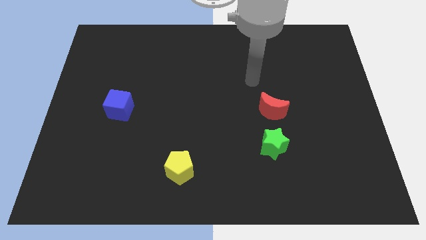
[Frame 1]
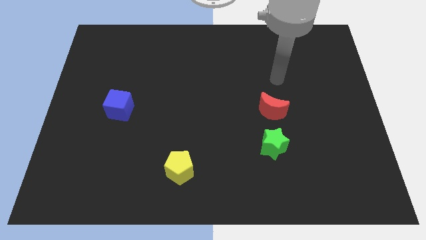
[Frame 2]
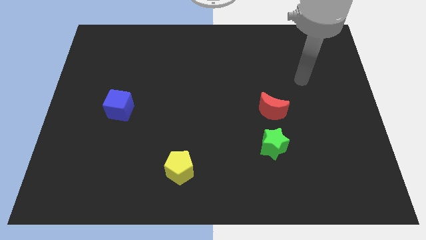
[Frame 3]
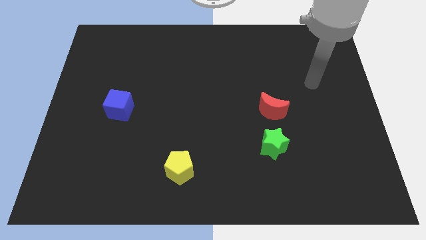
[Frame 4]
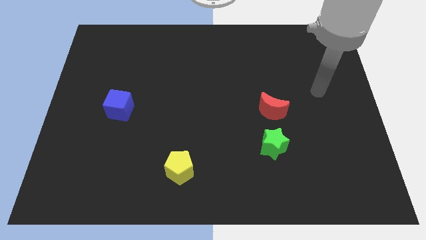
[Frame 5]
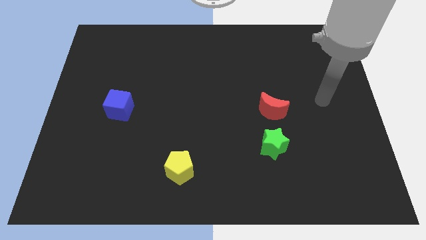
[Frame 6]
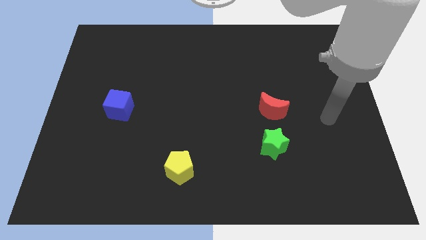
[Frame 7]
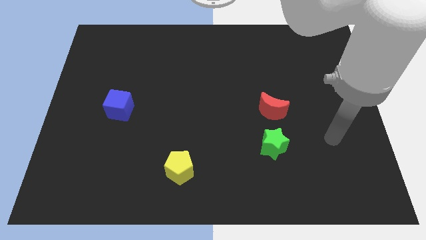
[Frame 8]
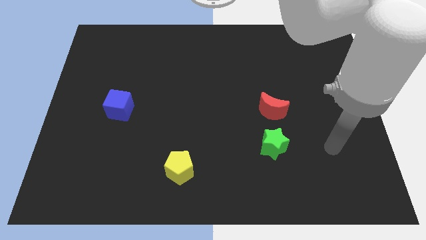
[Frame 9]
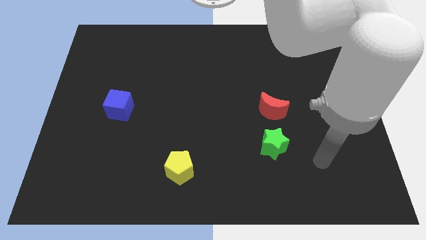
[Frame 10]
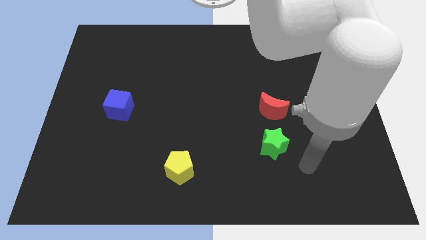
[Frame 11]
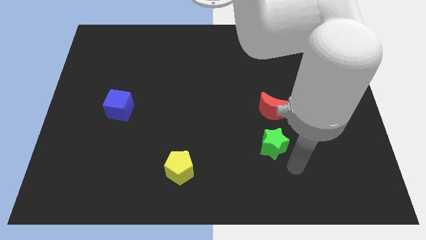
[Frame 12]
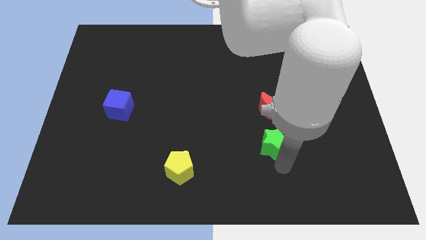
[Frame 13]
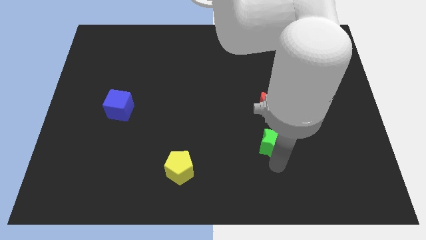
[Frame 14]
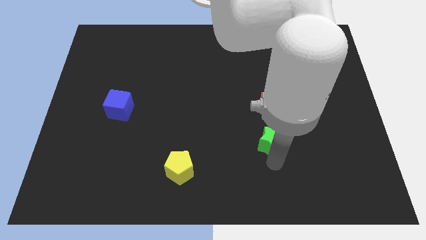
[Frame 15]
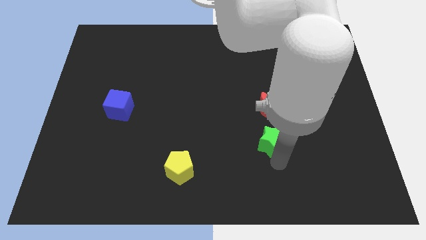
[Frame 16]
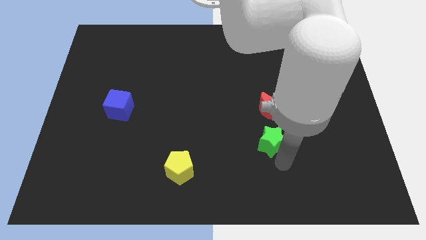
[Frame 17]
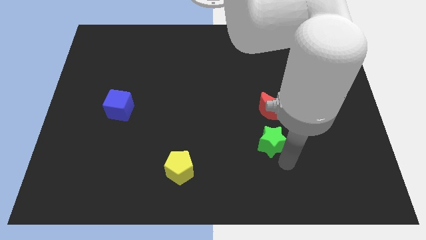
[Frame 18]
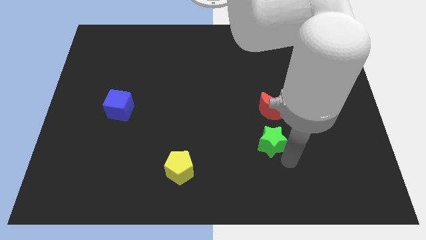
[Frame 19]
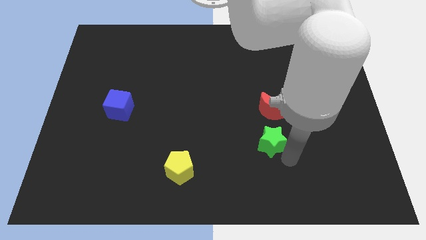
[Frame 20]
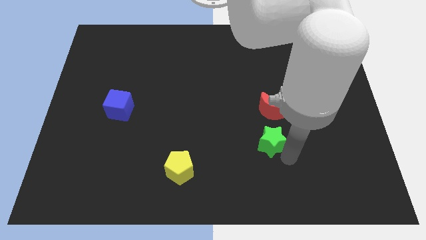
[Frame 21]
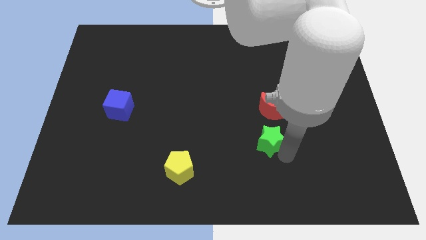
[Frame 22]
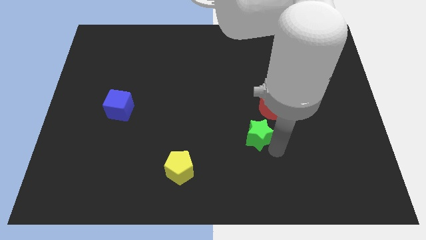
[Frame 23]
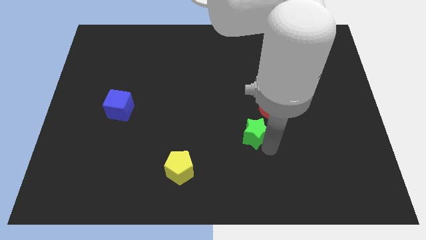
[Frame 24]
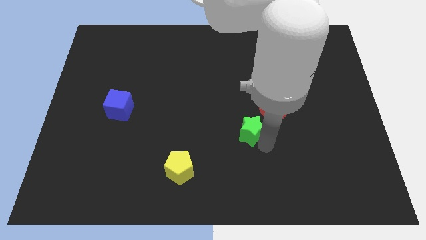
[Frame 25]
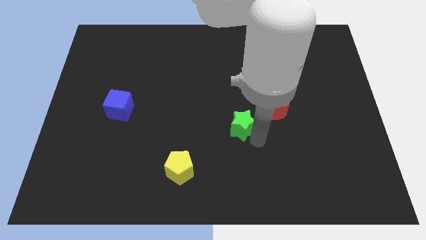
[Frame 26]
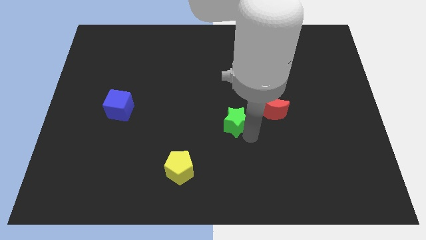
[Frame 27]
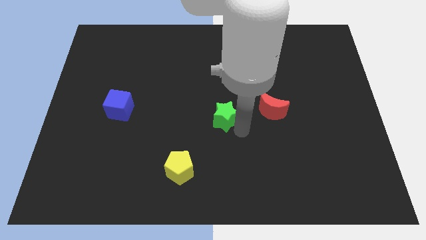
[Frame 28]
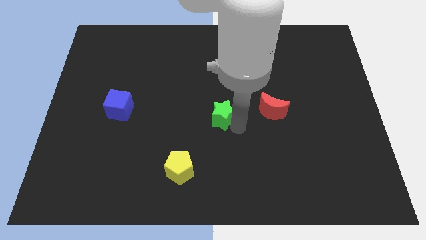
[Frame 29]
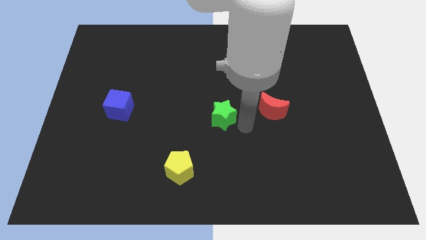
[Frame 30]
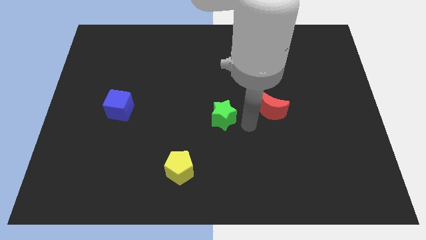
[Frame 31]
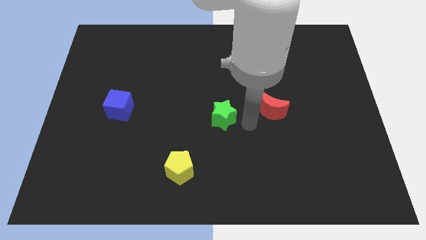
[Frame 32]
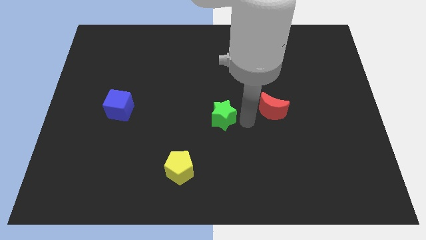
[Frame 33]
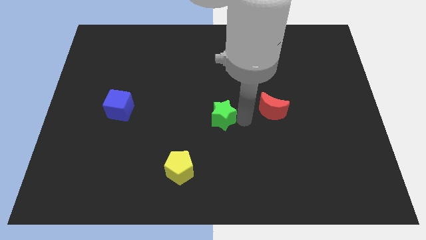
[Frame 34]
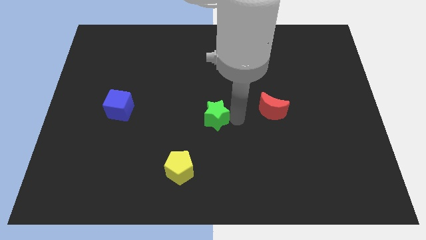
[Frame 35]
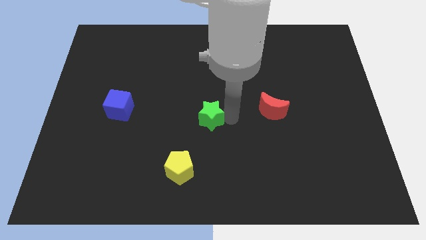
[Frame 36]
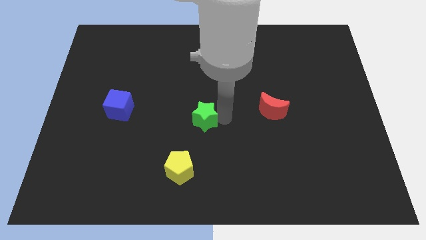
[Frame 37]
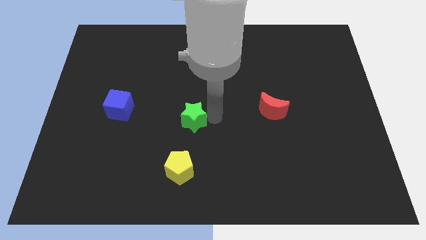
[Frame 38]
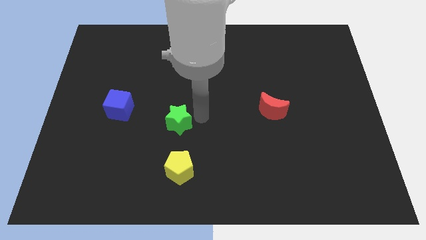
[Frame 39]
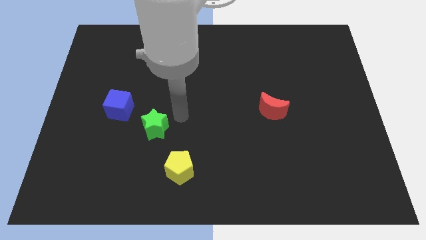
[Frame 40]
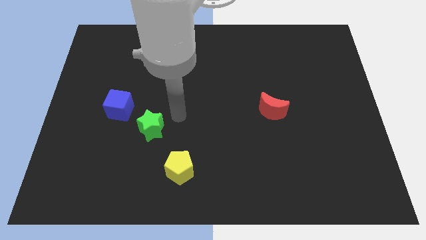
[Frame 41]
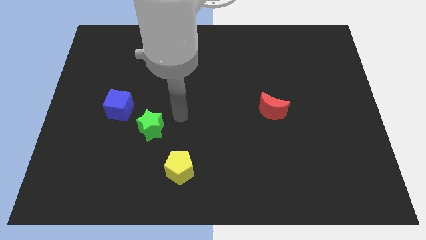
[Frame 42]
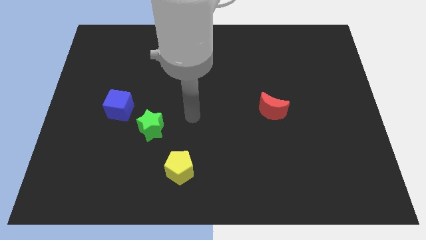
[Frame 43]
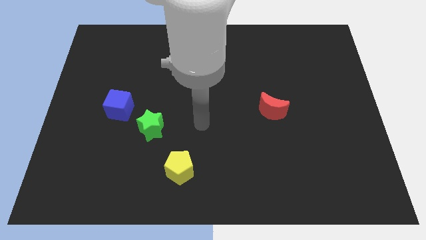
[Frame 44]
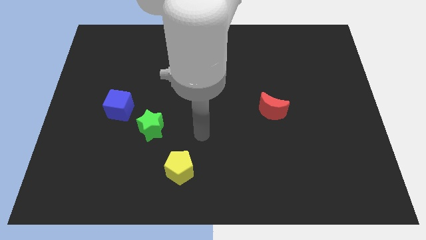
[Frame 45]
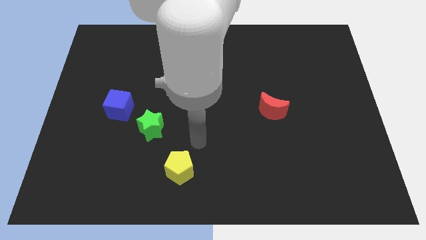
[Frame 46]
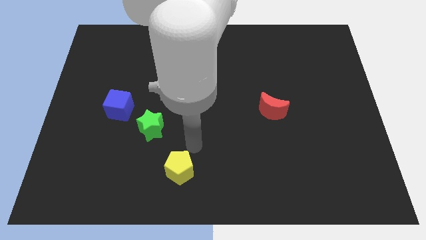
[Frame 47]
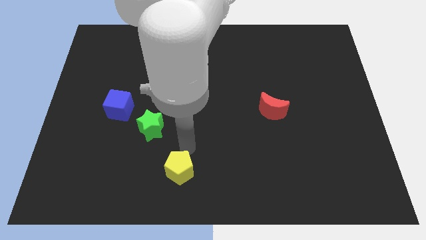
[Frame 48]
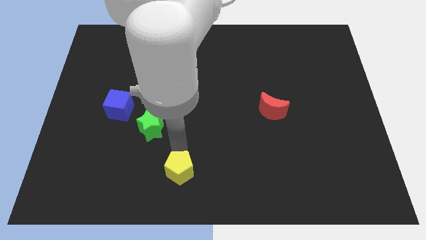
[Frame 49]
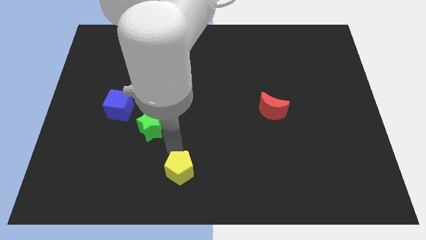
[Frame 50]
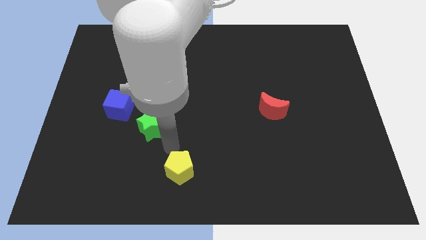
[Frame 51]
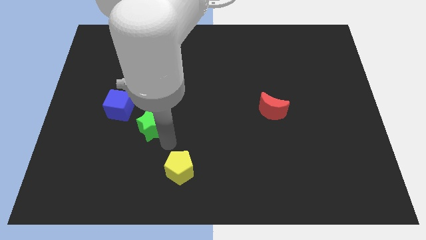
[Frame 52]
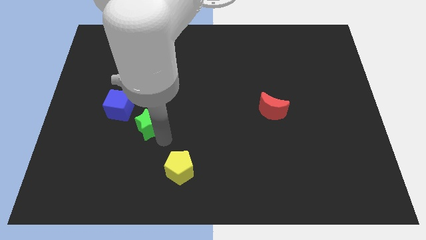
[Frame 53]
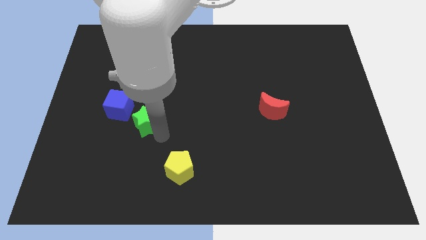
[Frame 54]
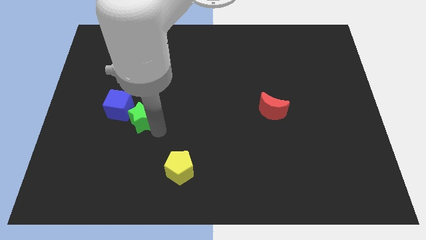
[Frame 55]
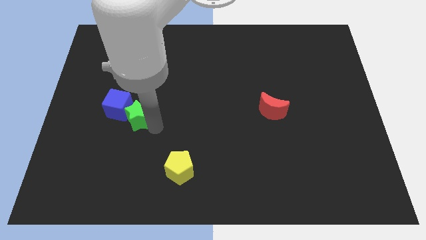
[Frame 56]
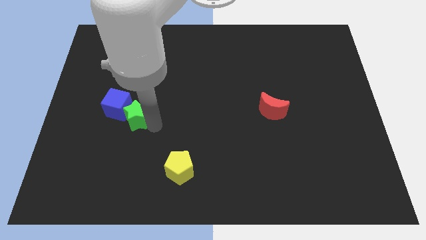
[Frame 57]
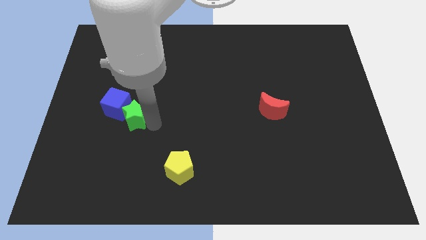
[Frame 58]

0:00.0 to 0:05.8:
put the green star to the cube

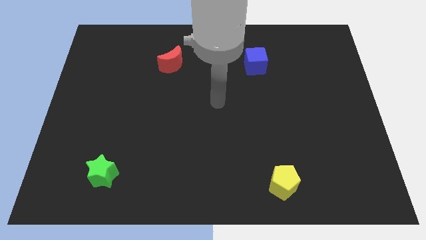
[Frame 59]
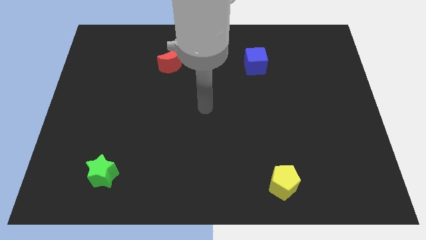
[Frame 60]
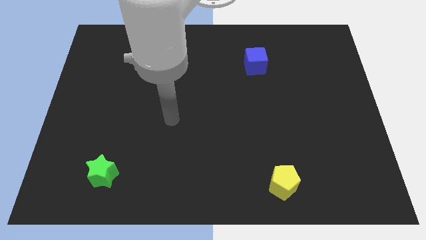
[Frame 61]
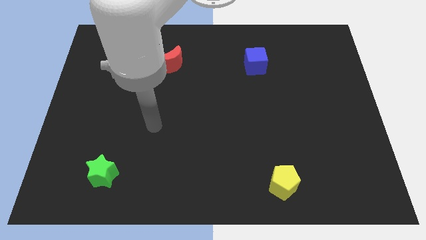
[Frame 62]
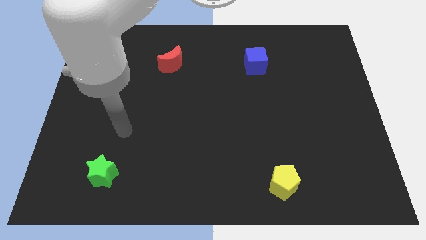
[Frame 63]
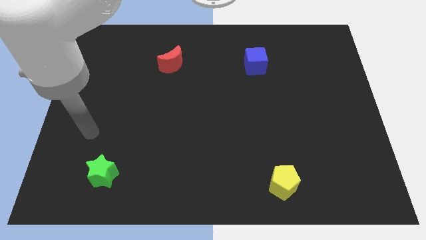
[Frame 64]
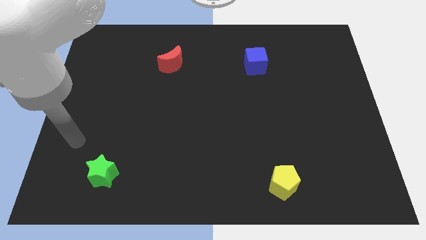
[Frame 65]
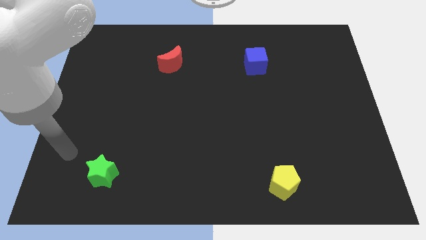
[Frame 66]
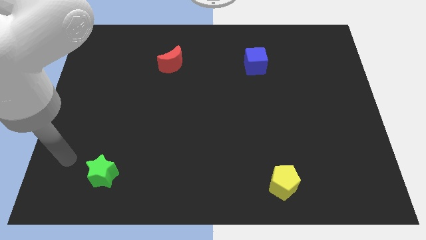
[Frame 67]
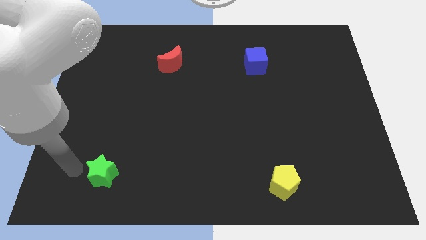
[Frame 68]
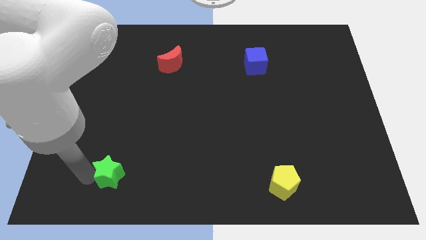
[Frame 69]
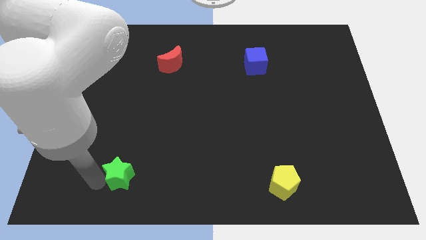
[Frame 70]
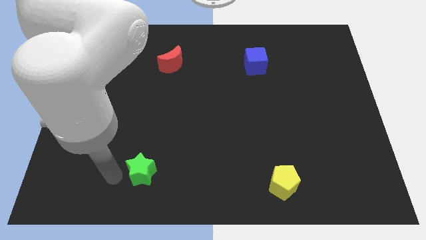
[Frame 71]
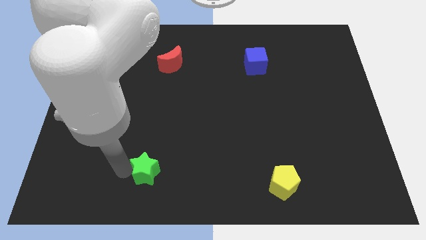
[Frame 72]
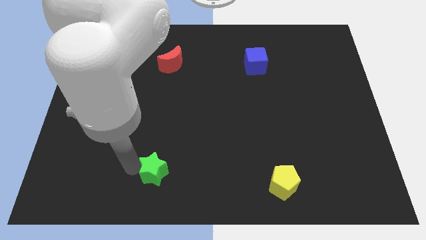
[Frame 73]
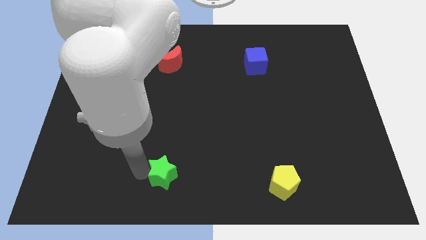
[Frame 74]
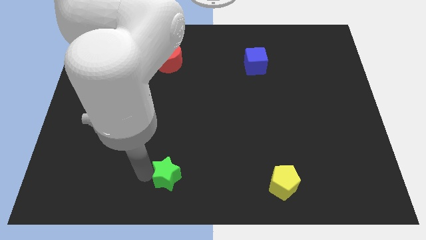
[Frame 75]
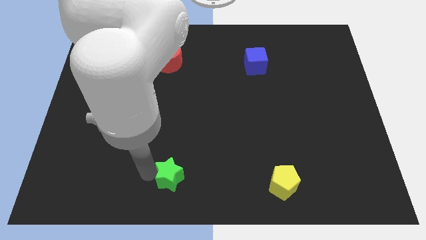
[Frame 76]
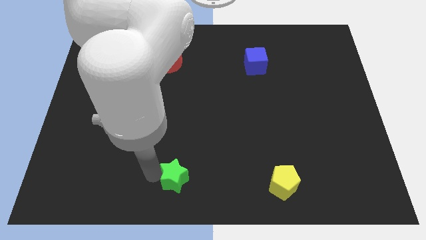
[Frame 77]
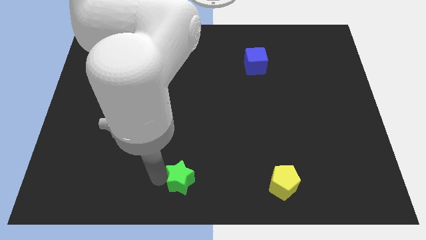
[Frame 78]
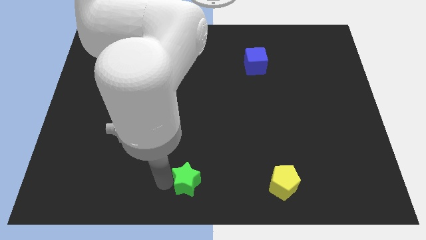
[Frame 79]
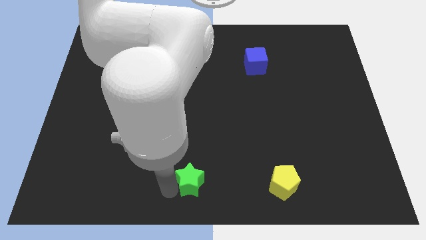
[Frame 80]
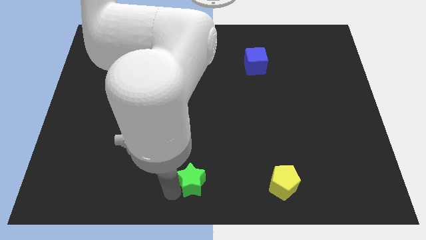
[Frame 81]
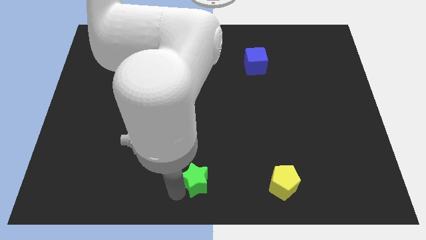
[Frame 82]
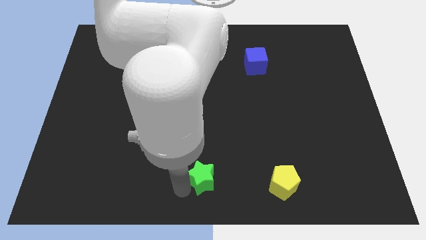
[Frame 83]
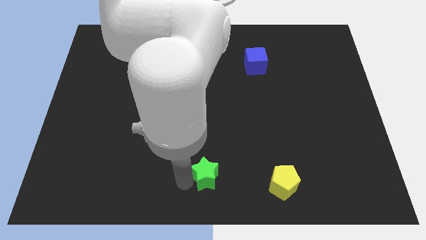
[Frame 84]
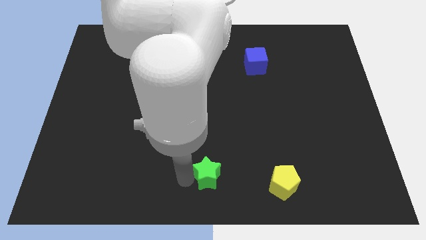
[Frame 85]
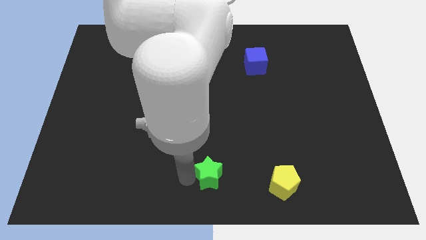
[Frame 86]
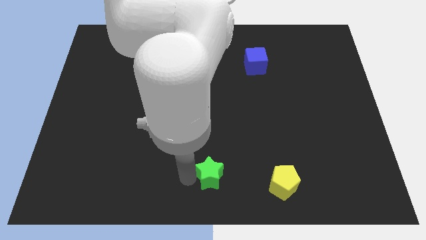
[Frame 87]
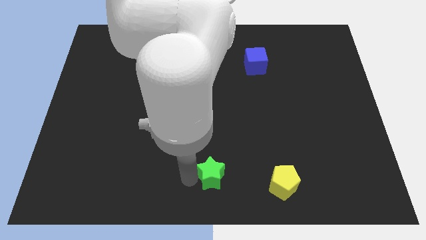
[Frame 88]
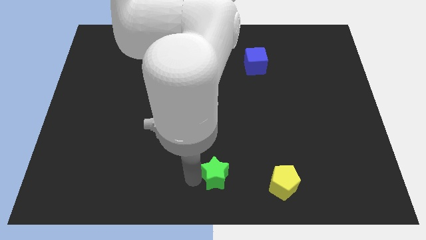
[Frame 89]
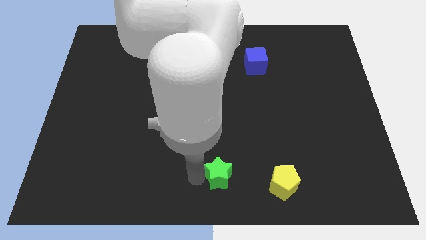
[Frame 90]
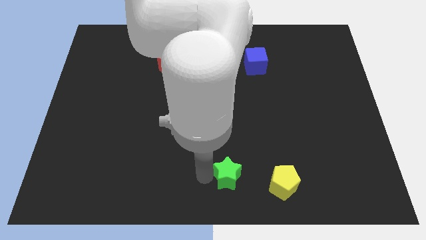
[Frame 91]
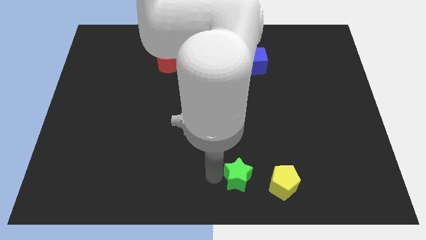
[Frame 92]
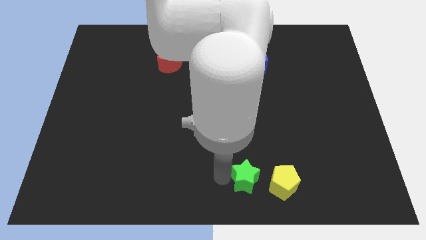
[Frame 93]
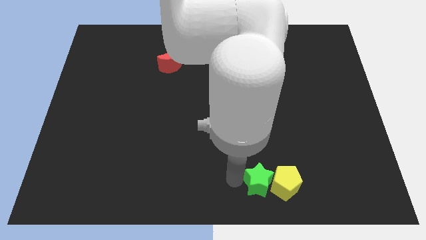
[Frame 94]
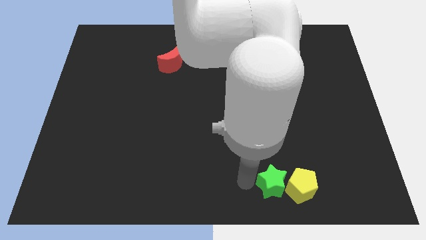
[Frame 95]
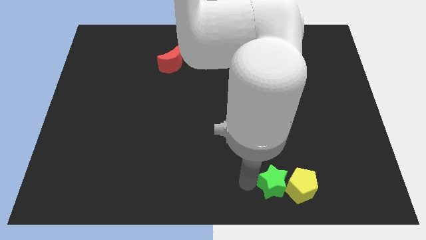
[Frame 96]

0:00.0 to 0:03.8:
push the green block close to the pentagon
